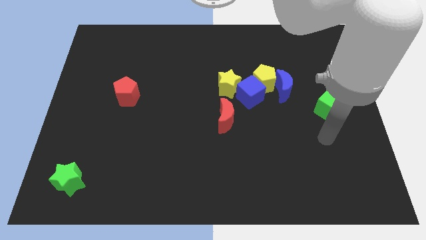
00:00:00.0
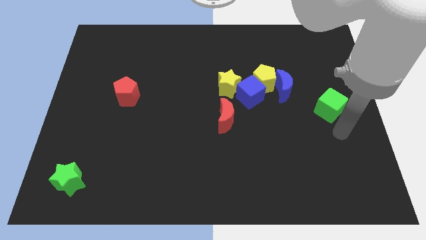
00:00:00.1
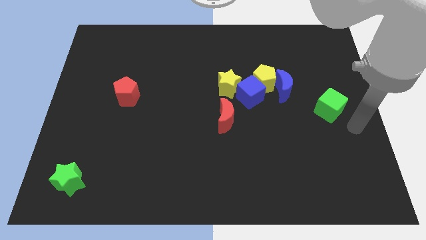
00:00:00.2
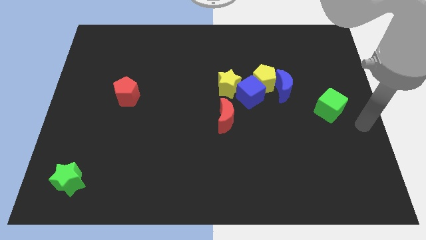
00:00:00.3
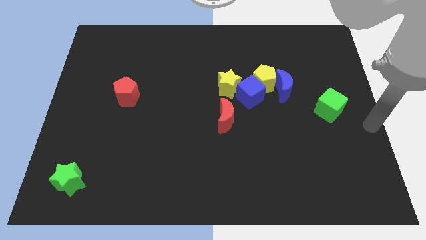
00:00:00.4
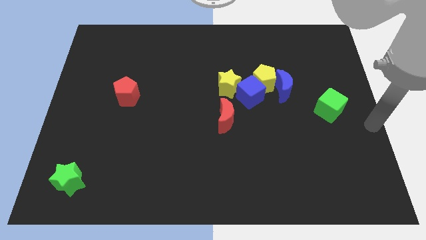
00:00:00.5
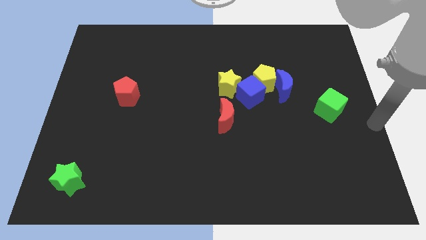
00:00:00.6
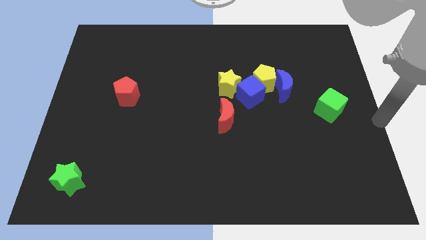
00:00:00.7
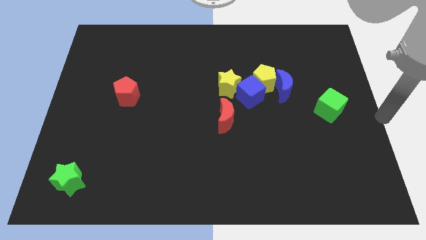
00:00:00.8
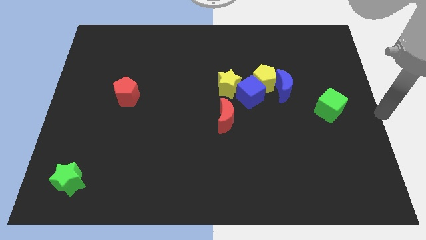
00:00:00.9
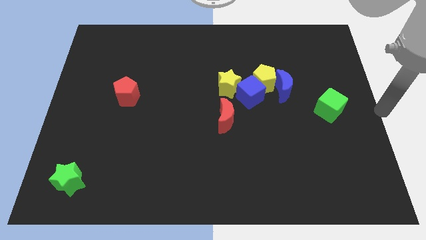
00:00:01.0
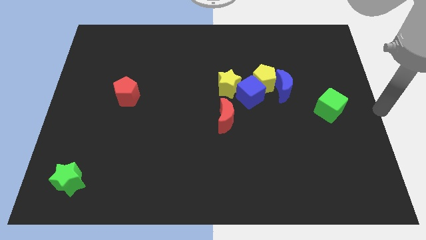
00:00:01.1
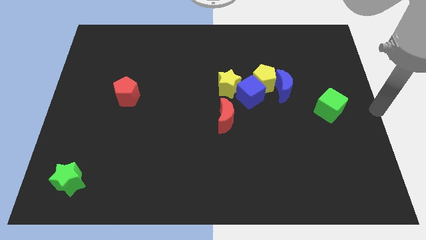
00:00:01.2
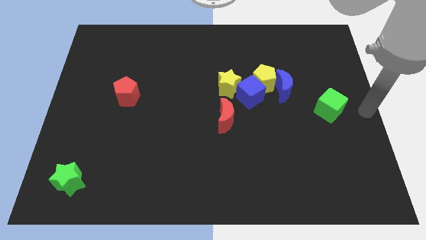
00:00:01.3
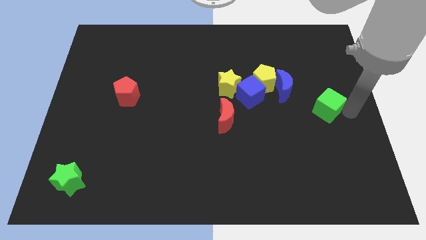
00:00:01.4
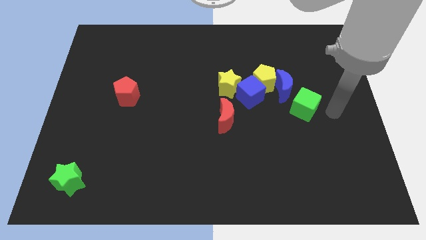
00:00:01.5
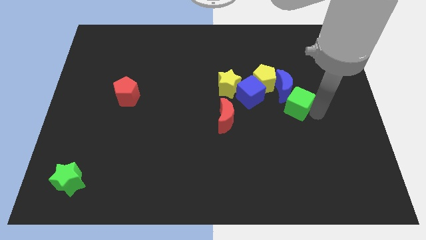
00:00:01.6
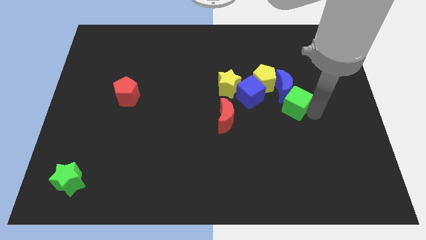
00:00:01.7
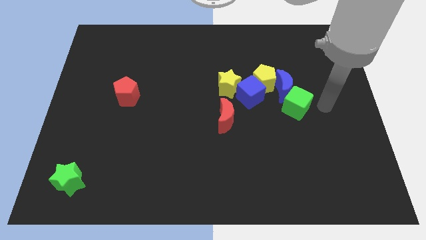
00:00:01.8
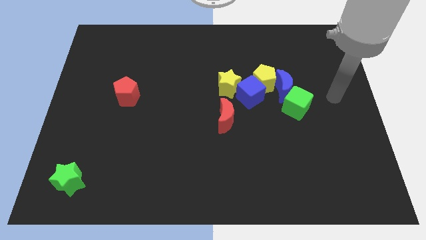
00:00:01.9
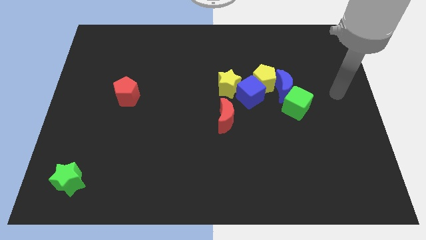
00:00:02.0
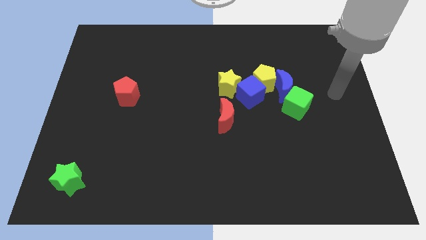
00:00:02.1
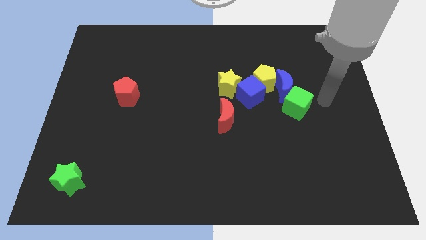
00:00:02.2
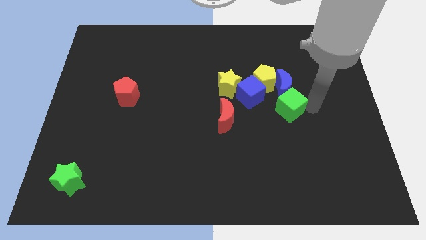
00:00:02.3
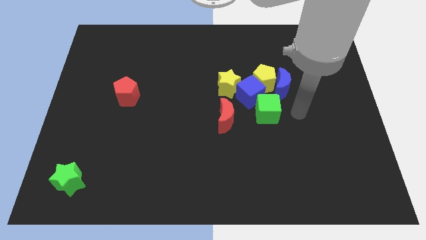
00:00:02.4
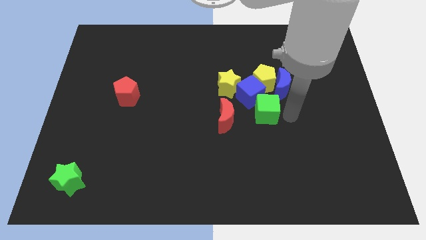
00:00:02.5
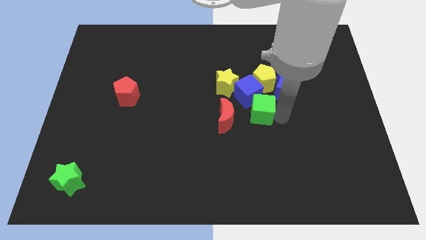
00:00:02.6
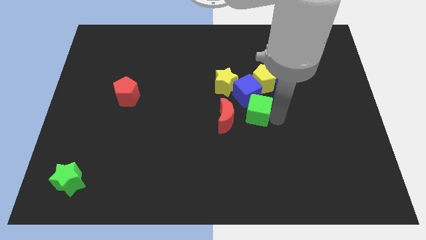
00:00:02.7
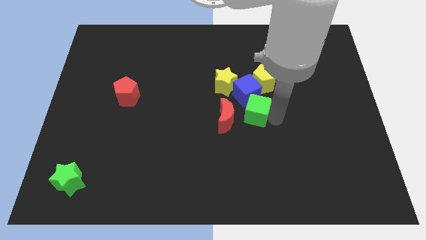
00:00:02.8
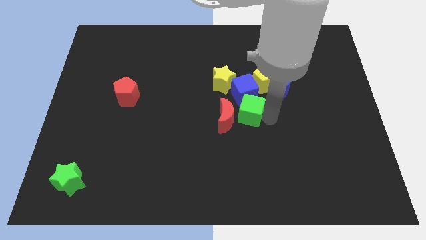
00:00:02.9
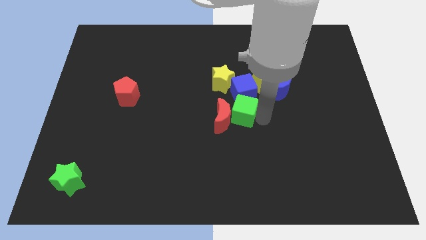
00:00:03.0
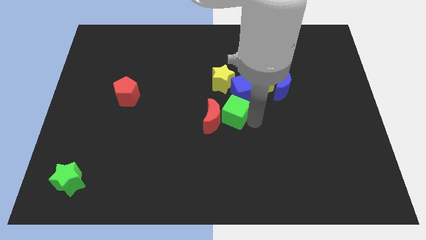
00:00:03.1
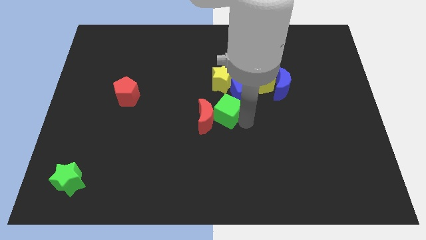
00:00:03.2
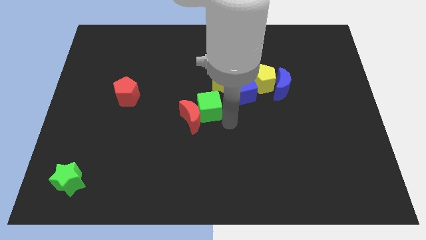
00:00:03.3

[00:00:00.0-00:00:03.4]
move the green cube into the right side of the red crescent

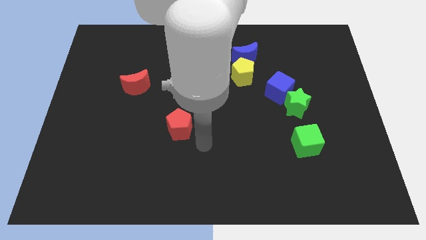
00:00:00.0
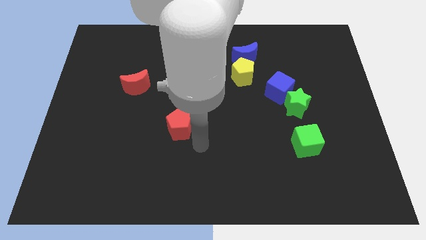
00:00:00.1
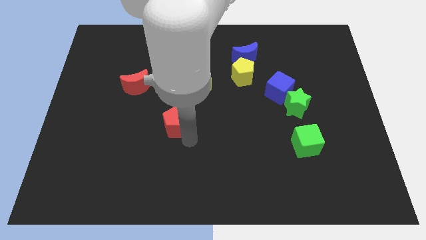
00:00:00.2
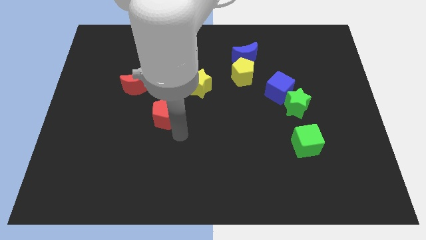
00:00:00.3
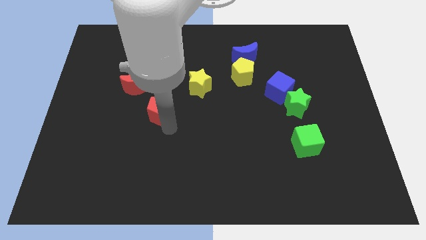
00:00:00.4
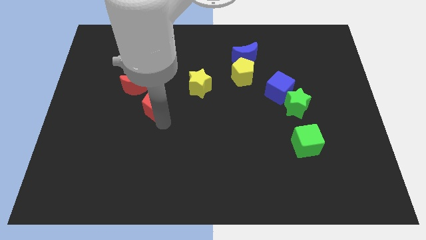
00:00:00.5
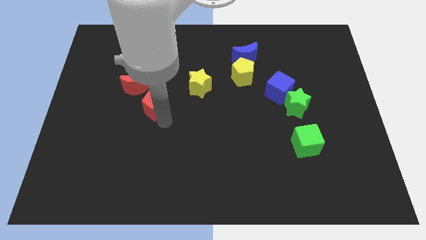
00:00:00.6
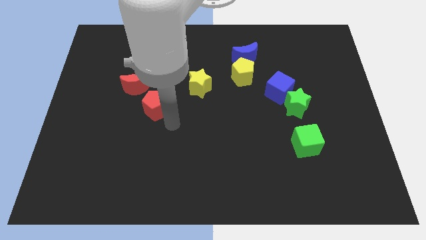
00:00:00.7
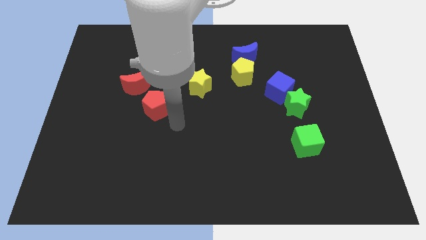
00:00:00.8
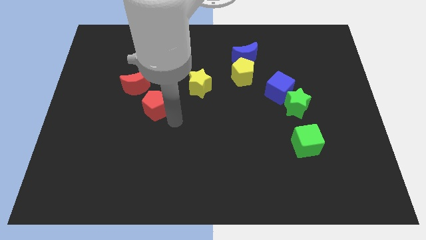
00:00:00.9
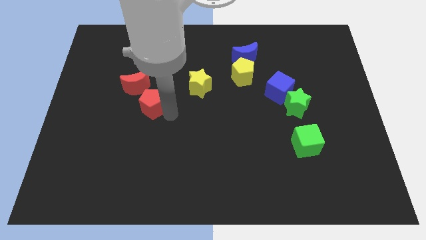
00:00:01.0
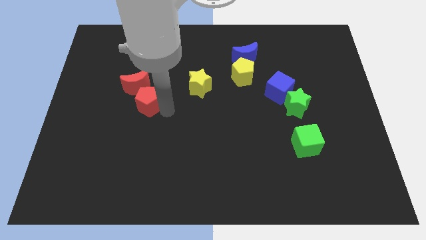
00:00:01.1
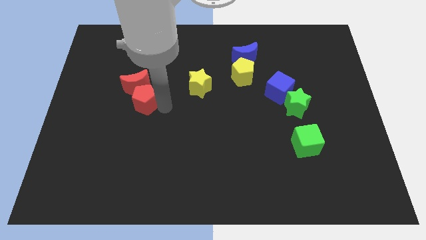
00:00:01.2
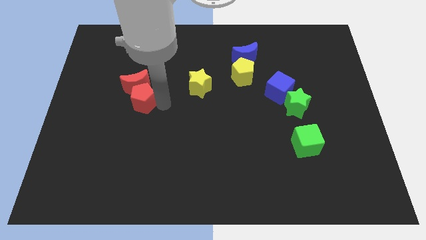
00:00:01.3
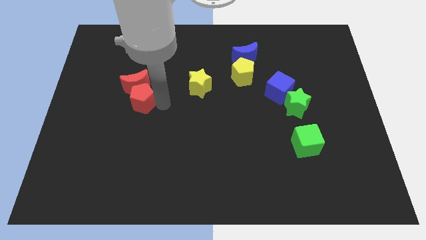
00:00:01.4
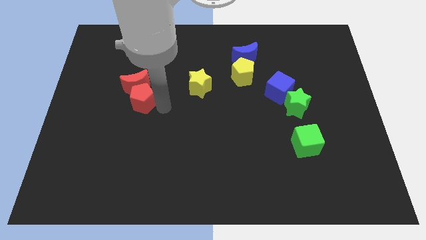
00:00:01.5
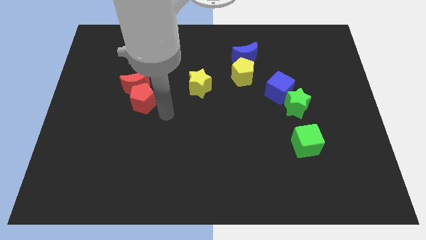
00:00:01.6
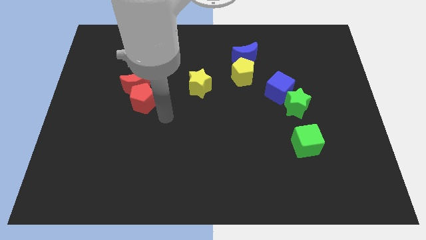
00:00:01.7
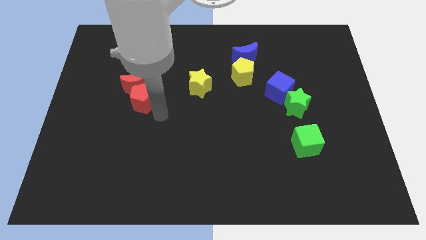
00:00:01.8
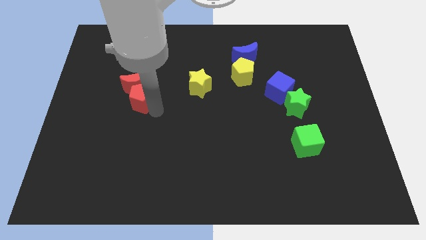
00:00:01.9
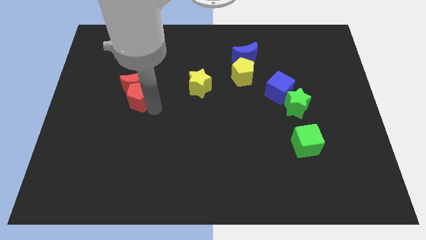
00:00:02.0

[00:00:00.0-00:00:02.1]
place red pentagon below red moon

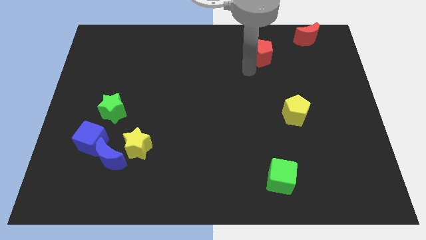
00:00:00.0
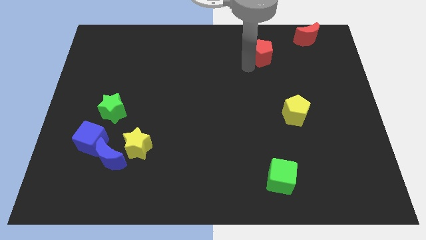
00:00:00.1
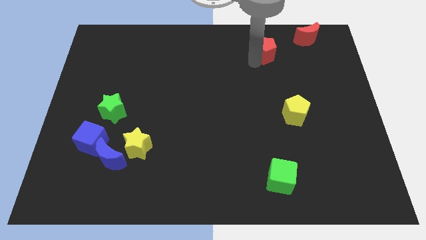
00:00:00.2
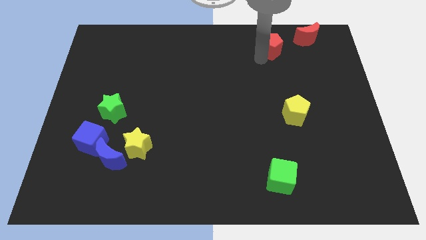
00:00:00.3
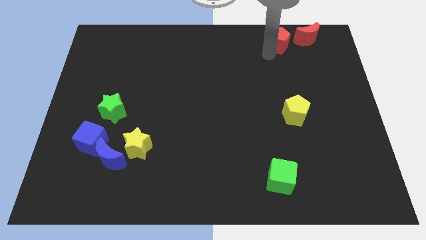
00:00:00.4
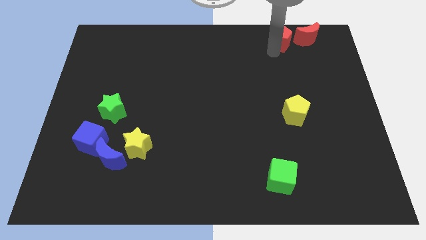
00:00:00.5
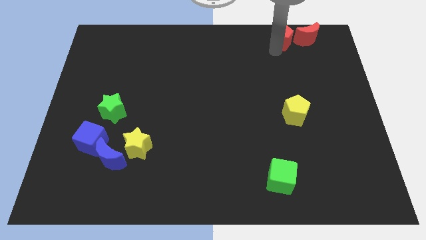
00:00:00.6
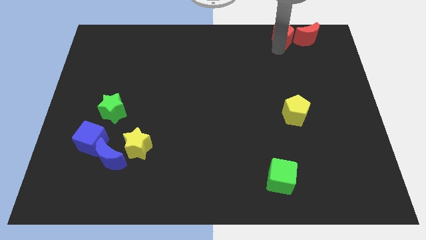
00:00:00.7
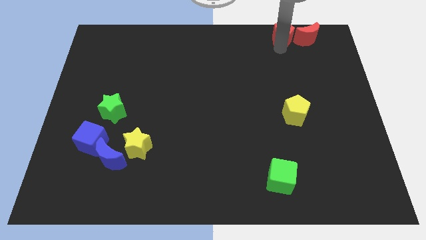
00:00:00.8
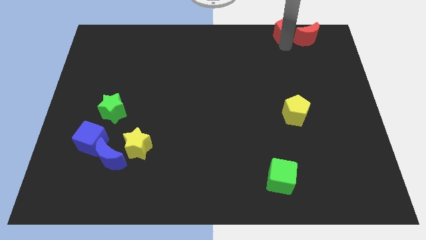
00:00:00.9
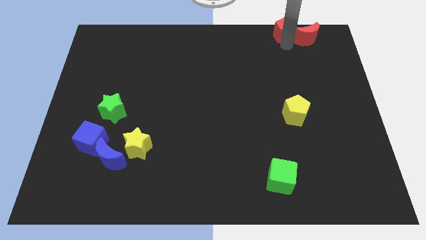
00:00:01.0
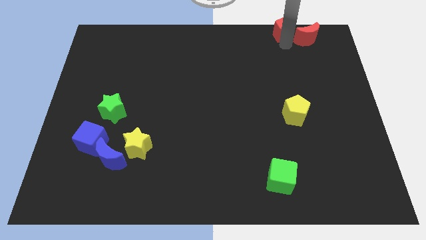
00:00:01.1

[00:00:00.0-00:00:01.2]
place the red pentagon left side to the red moon

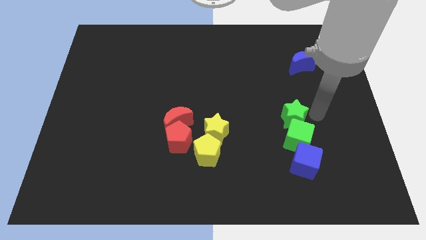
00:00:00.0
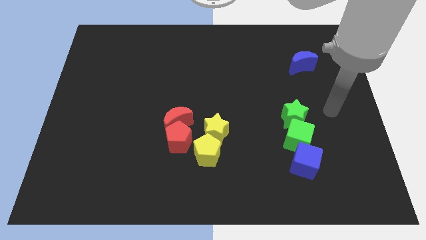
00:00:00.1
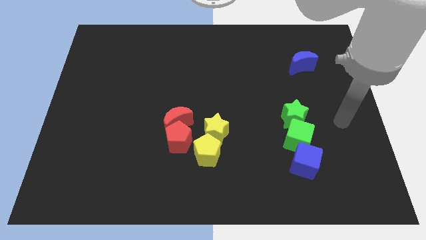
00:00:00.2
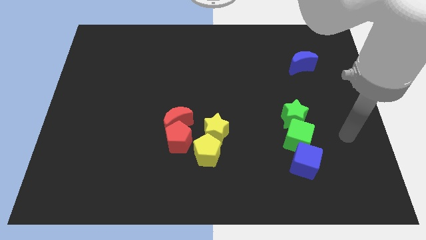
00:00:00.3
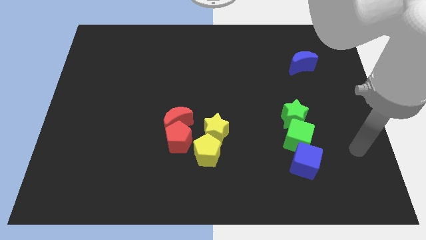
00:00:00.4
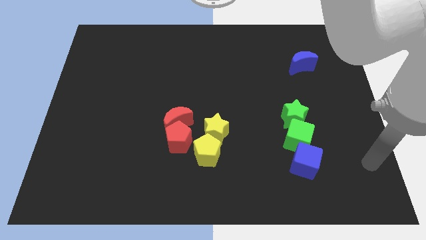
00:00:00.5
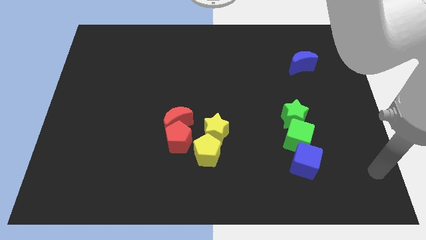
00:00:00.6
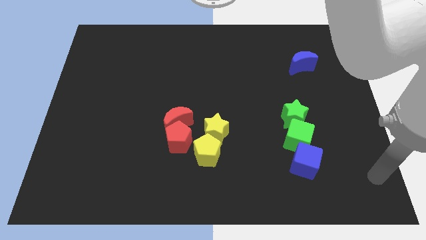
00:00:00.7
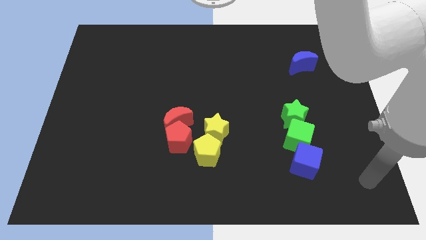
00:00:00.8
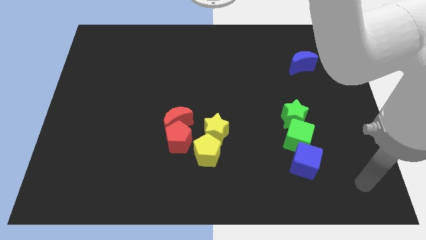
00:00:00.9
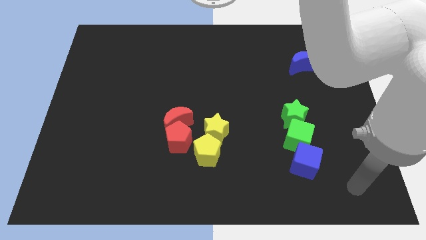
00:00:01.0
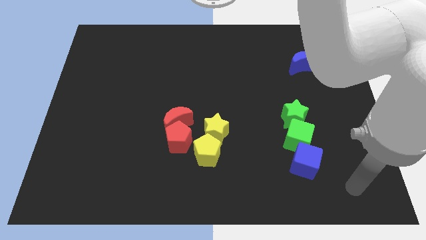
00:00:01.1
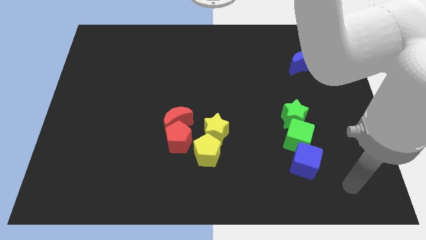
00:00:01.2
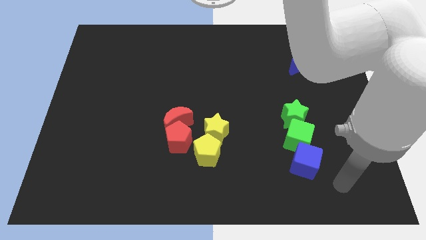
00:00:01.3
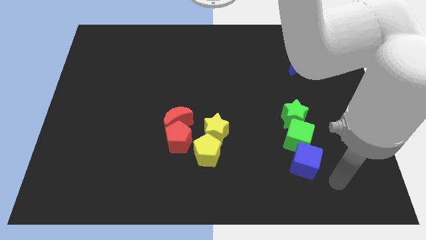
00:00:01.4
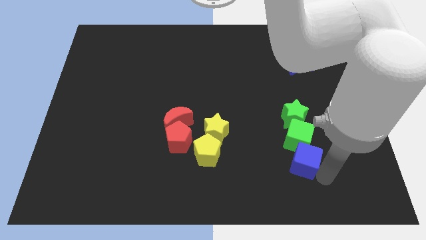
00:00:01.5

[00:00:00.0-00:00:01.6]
move your arm towards blue cube

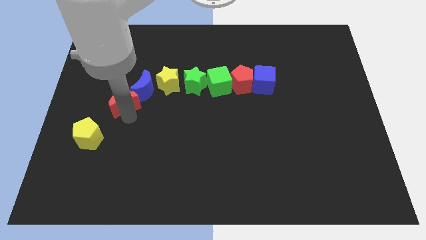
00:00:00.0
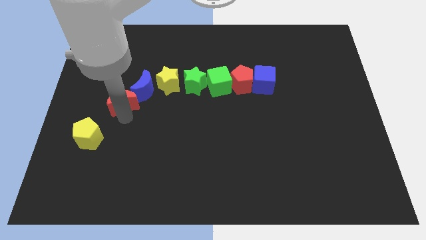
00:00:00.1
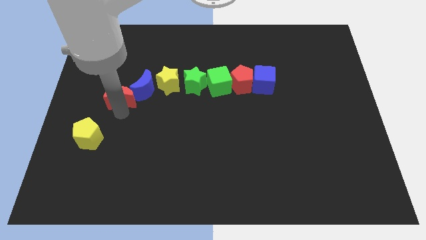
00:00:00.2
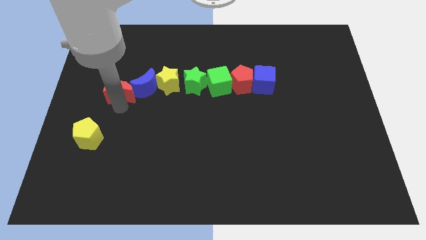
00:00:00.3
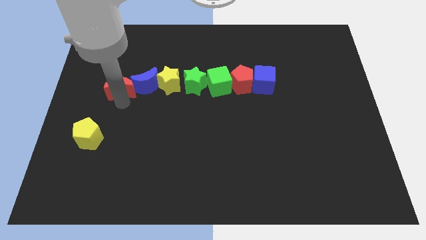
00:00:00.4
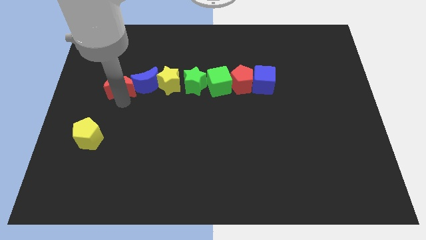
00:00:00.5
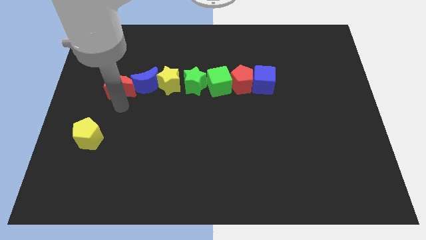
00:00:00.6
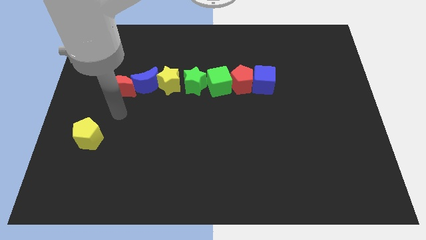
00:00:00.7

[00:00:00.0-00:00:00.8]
move the red moon slightly towards the top of the board
